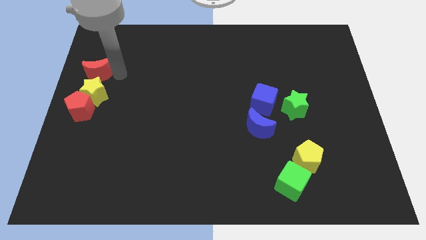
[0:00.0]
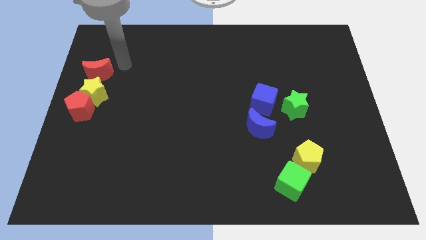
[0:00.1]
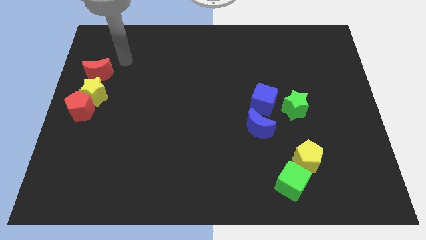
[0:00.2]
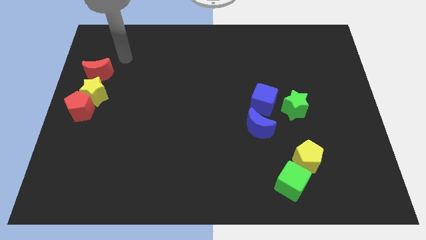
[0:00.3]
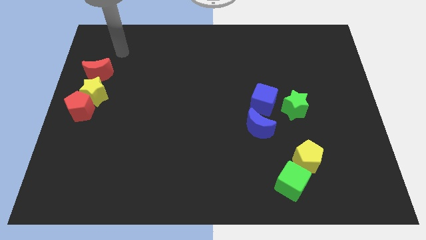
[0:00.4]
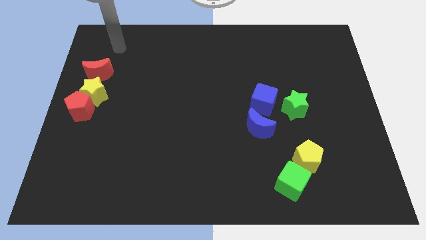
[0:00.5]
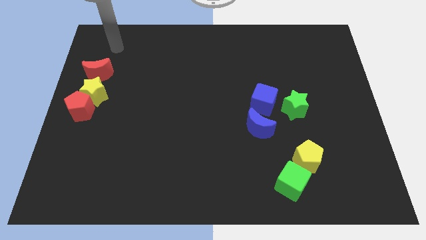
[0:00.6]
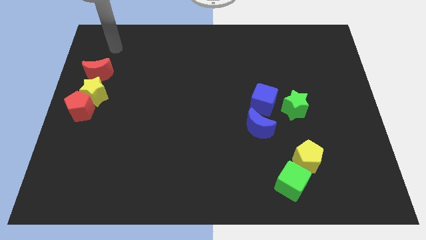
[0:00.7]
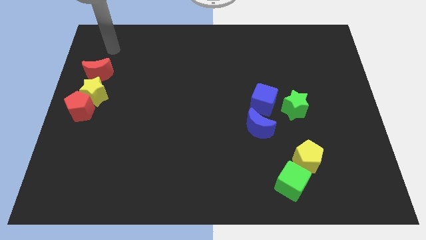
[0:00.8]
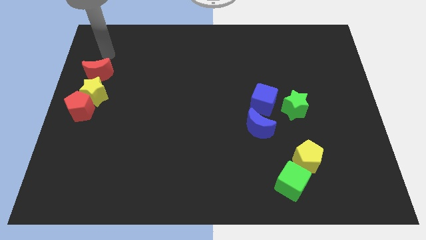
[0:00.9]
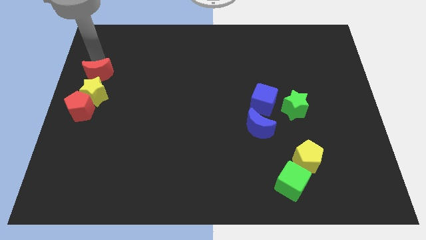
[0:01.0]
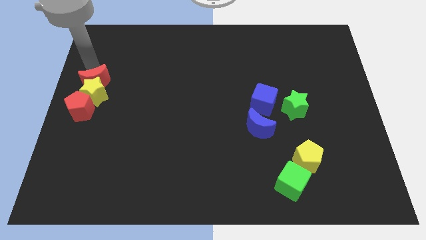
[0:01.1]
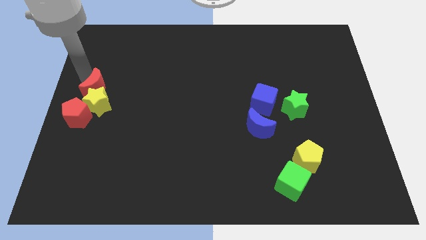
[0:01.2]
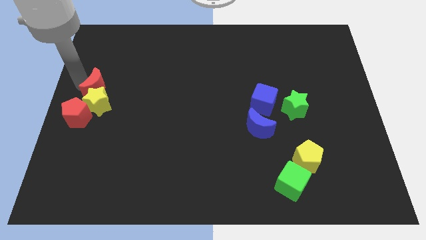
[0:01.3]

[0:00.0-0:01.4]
place the red crescent above the yellow star

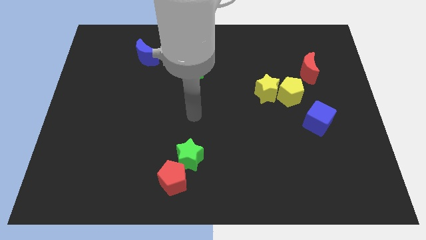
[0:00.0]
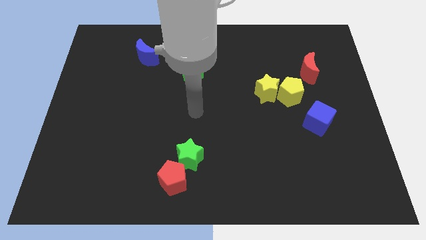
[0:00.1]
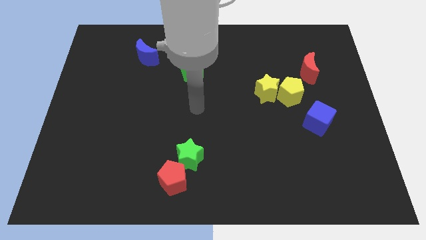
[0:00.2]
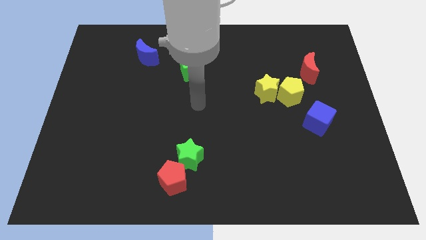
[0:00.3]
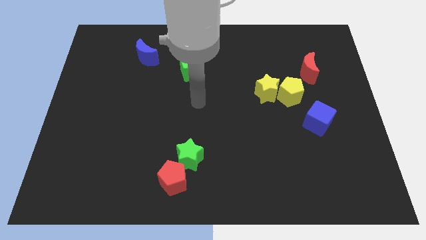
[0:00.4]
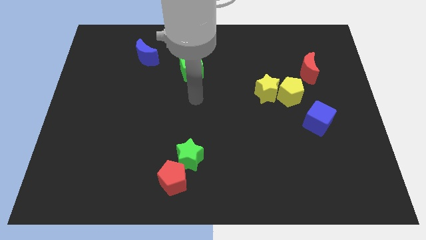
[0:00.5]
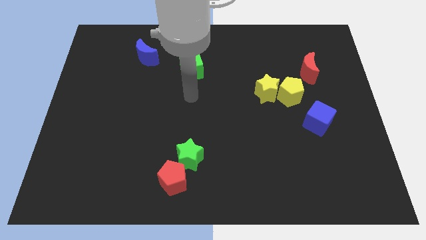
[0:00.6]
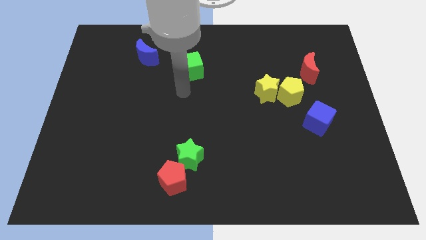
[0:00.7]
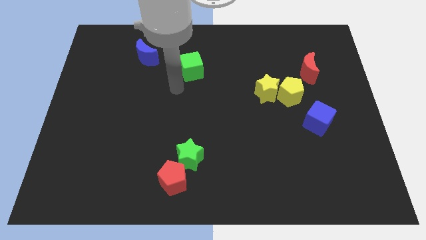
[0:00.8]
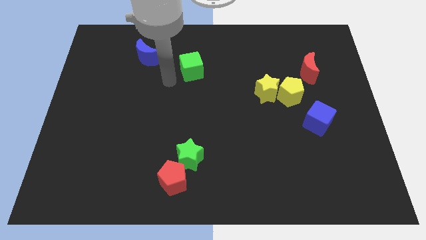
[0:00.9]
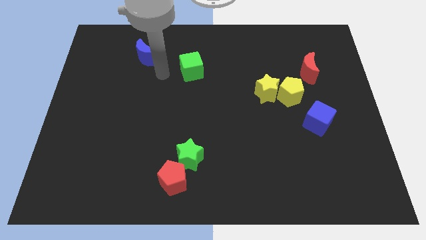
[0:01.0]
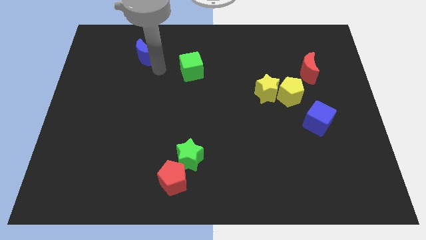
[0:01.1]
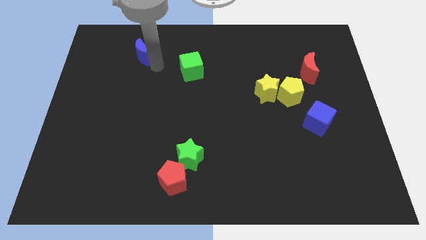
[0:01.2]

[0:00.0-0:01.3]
place your arm to the bottom side of the blue boon

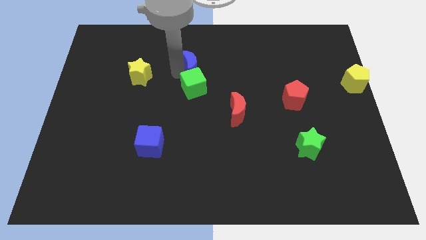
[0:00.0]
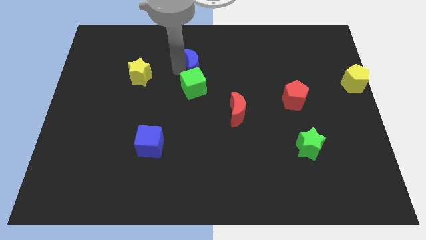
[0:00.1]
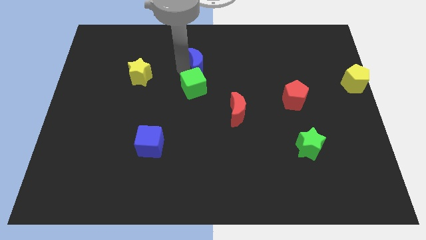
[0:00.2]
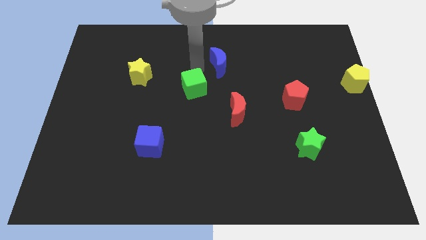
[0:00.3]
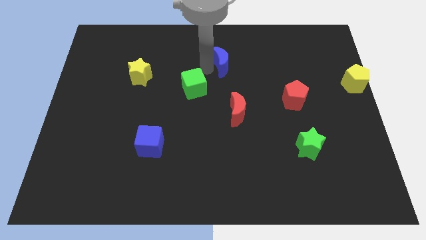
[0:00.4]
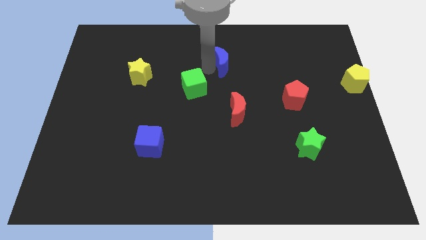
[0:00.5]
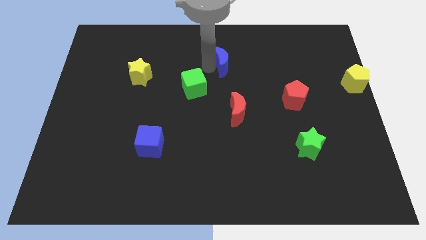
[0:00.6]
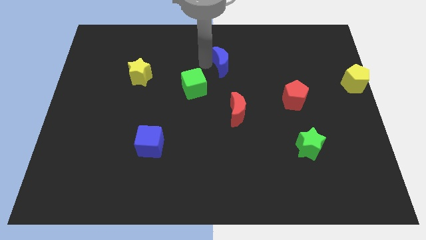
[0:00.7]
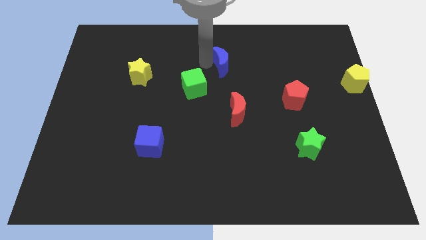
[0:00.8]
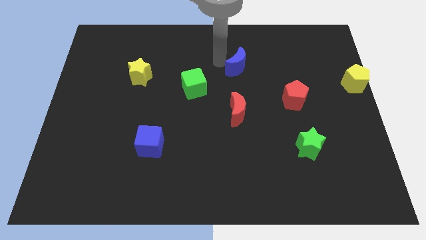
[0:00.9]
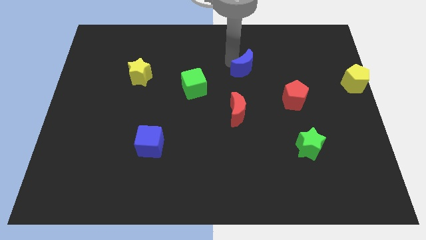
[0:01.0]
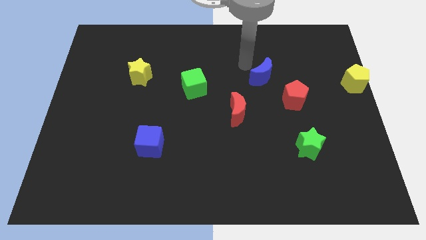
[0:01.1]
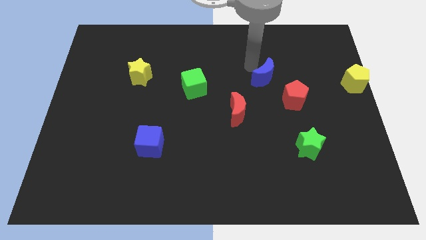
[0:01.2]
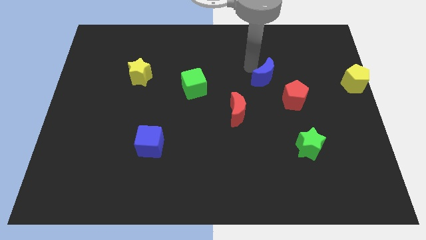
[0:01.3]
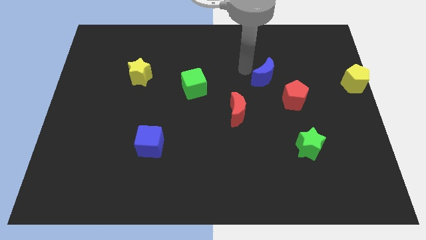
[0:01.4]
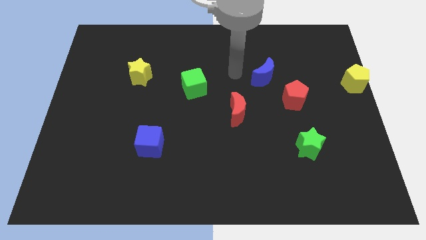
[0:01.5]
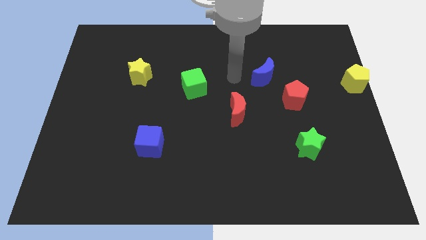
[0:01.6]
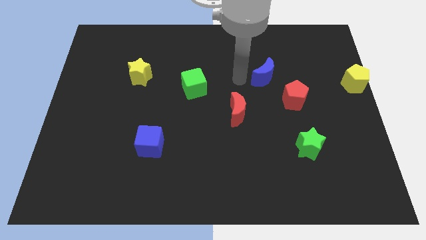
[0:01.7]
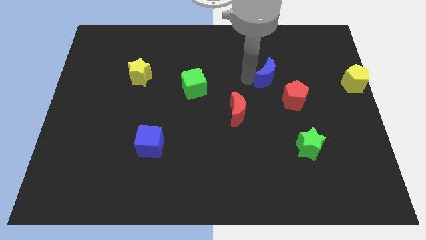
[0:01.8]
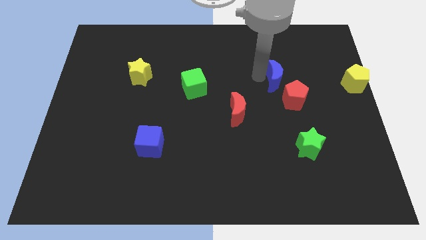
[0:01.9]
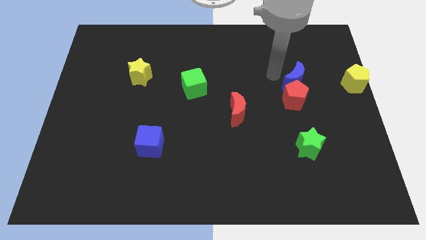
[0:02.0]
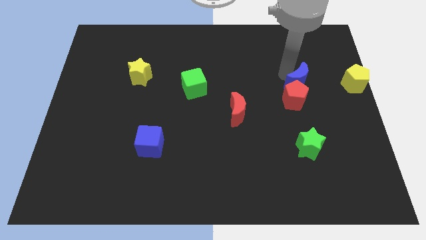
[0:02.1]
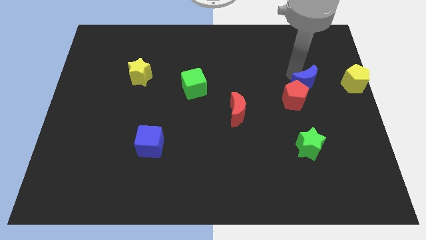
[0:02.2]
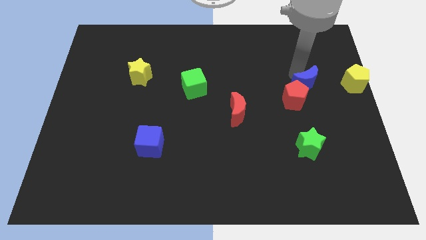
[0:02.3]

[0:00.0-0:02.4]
place blue crescent above red pentagon

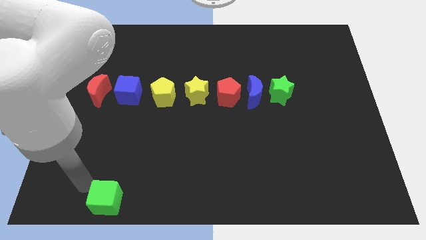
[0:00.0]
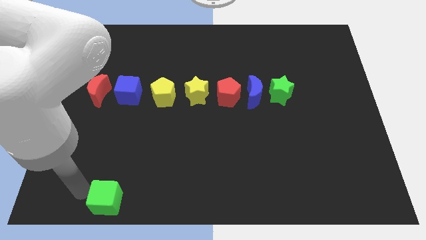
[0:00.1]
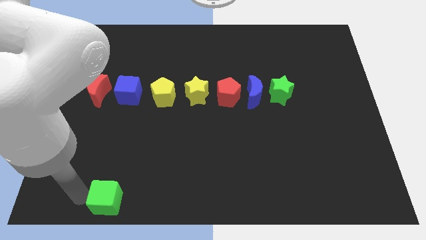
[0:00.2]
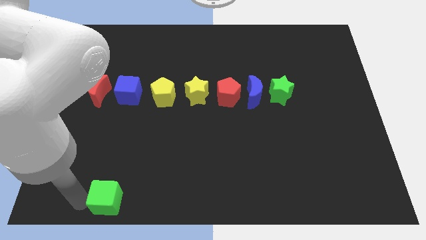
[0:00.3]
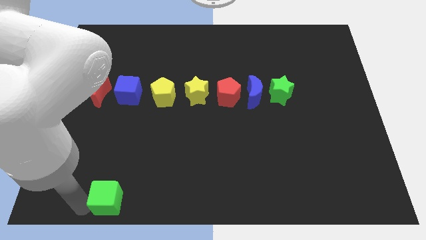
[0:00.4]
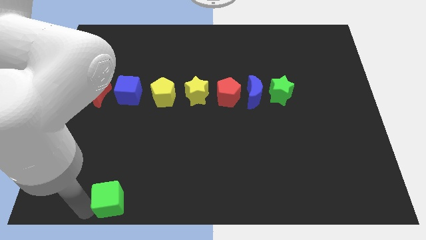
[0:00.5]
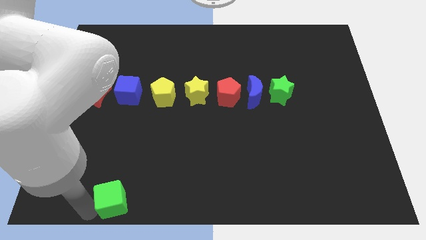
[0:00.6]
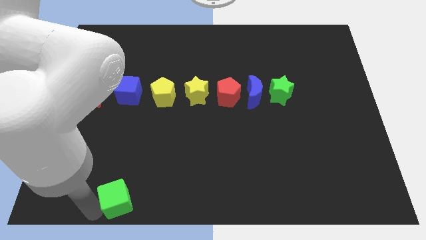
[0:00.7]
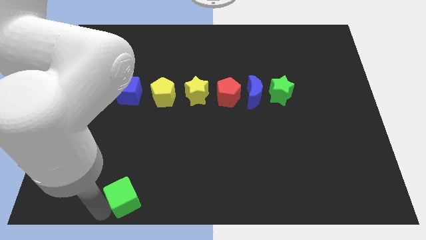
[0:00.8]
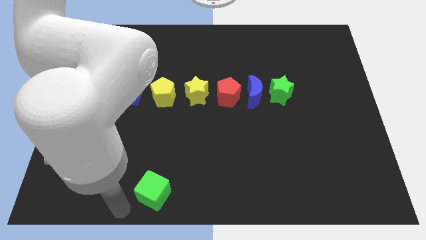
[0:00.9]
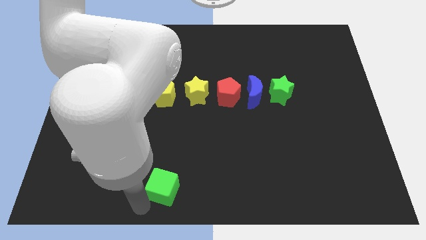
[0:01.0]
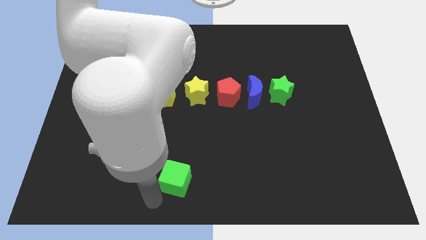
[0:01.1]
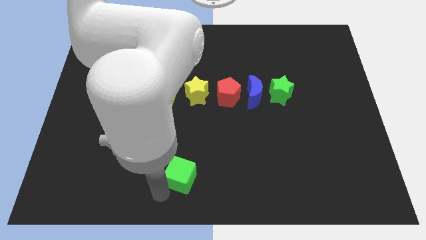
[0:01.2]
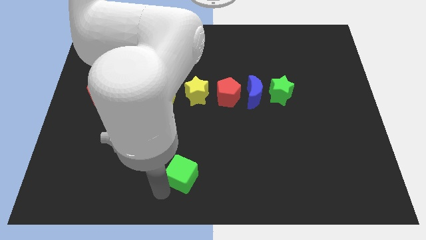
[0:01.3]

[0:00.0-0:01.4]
push the green cube to the bottom center of the board

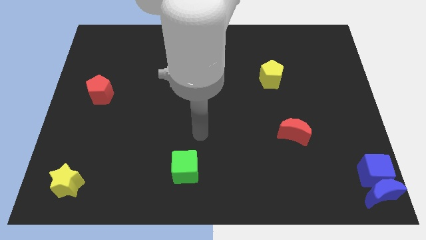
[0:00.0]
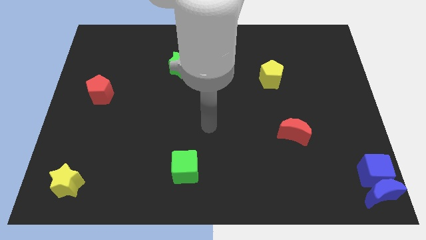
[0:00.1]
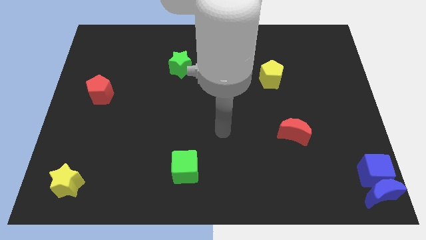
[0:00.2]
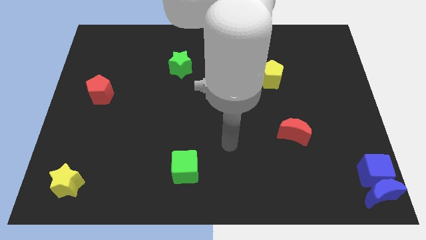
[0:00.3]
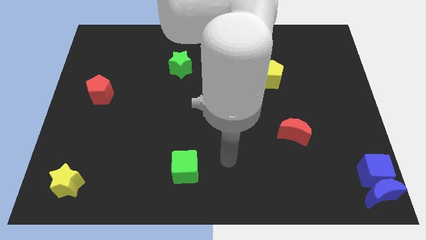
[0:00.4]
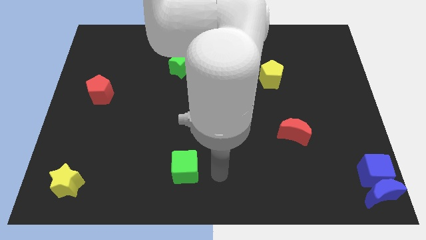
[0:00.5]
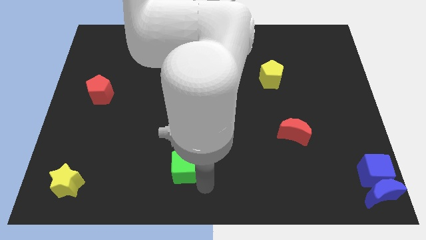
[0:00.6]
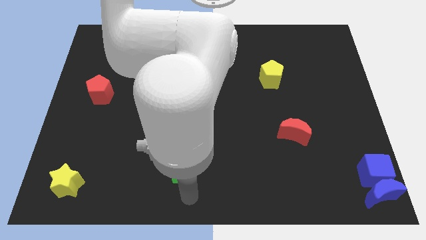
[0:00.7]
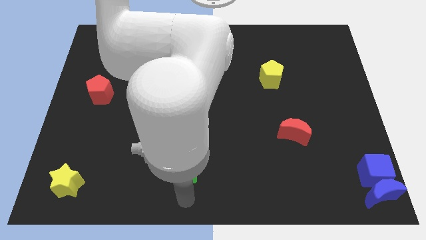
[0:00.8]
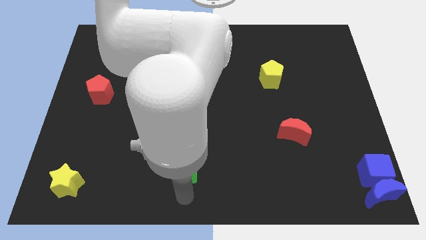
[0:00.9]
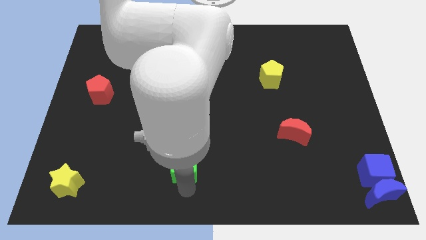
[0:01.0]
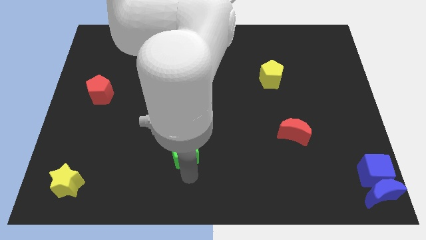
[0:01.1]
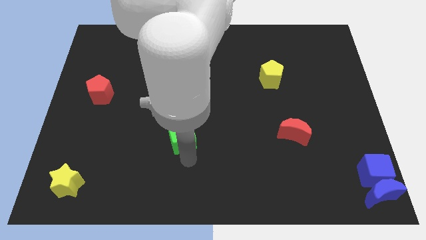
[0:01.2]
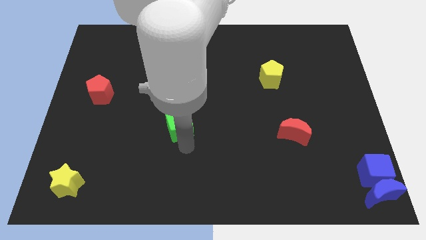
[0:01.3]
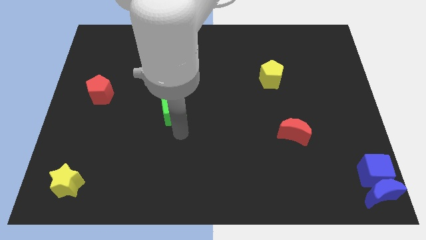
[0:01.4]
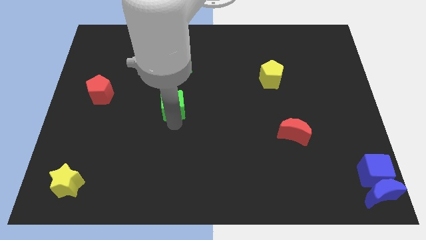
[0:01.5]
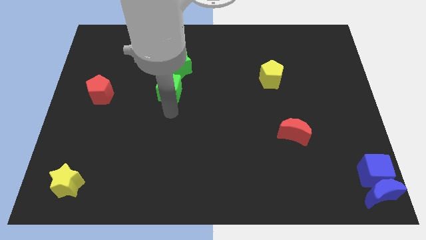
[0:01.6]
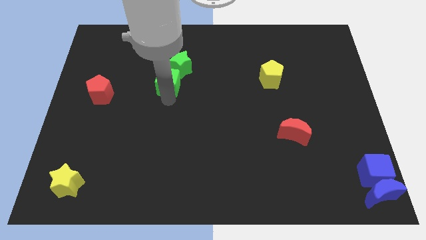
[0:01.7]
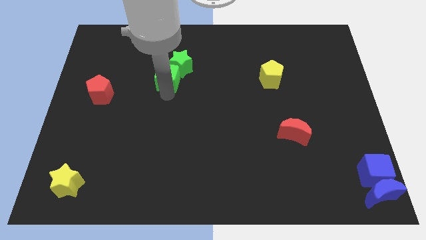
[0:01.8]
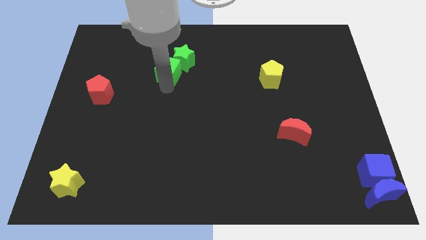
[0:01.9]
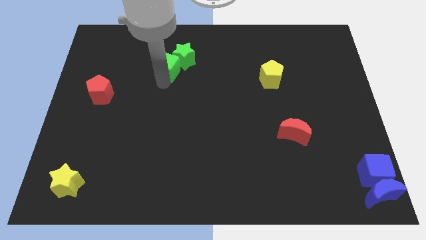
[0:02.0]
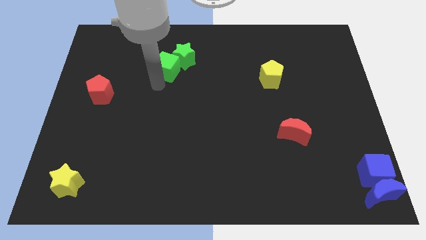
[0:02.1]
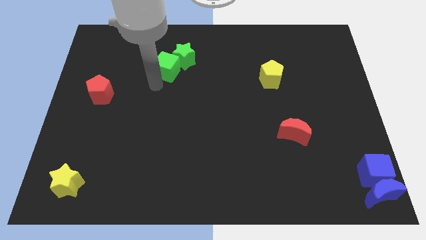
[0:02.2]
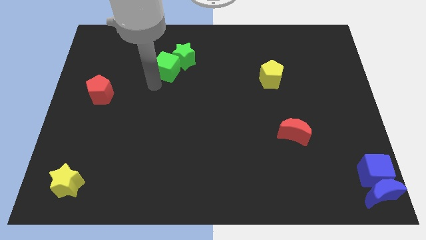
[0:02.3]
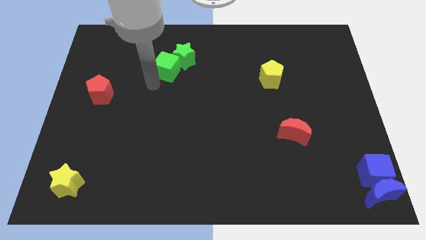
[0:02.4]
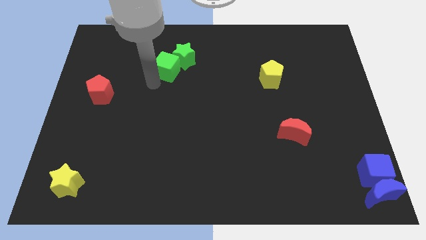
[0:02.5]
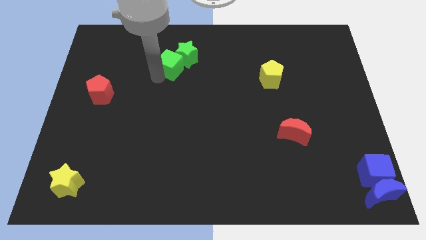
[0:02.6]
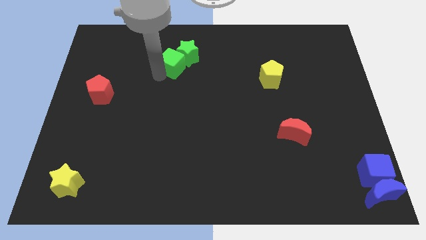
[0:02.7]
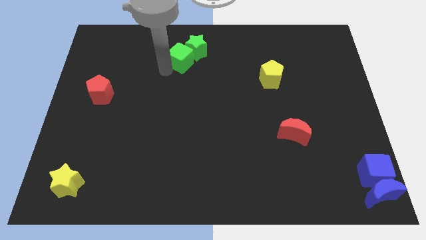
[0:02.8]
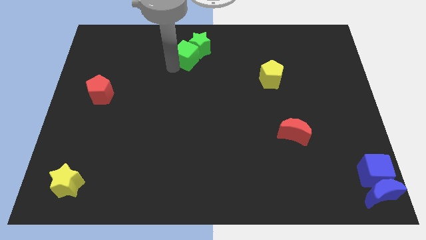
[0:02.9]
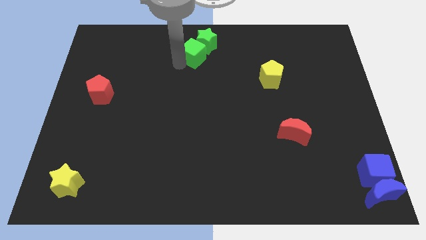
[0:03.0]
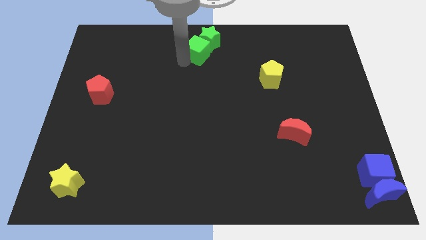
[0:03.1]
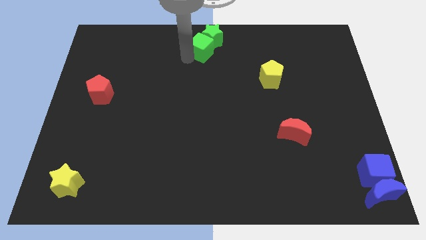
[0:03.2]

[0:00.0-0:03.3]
push the green star with the green cube towards the top center of the board
